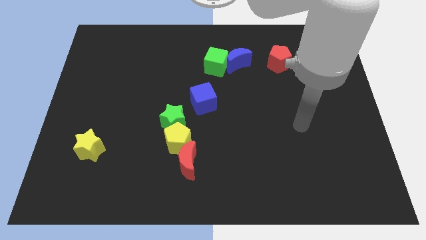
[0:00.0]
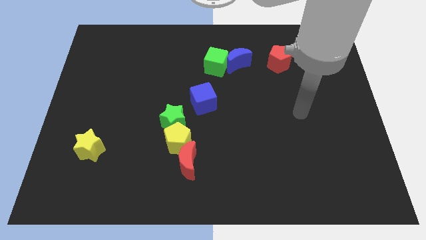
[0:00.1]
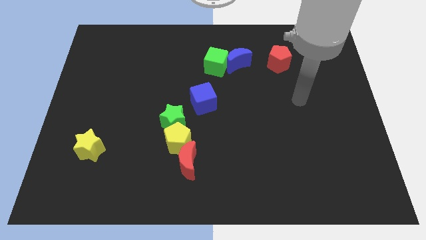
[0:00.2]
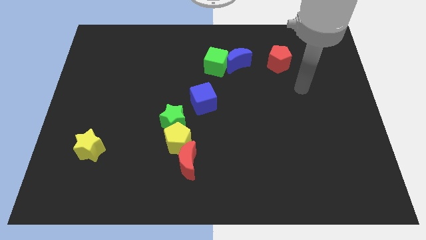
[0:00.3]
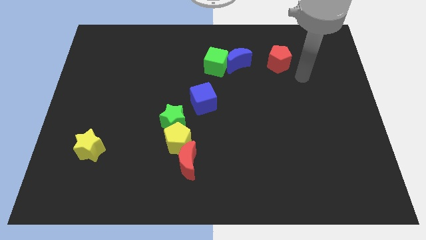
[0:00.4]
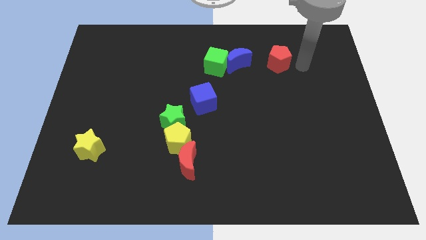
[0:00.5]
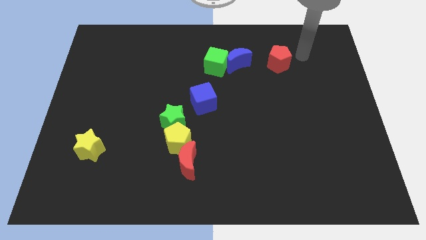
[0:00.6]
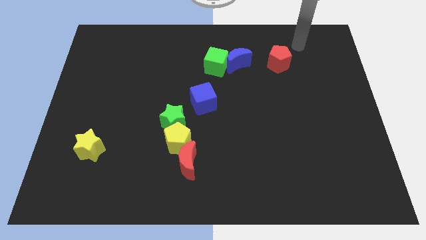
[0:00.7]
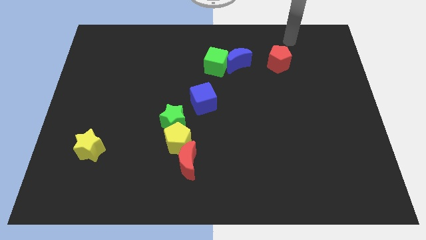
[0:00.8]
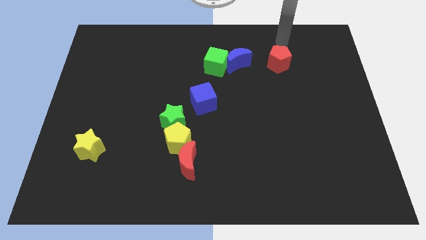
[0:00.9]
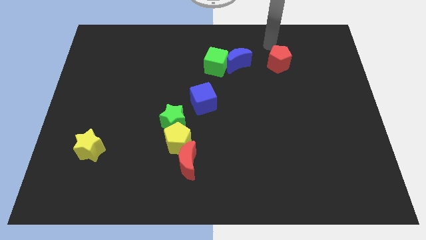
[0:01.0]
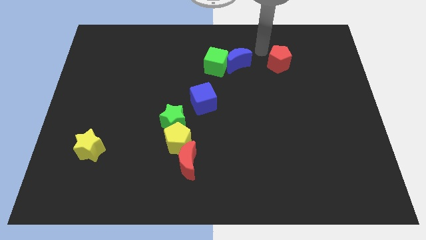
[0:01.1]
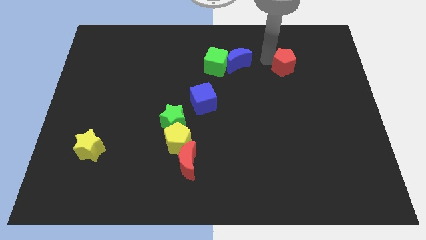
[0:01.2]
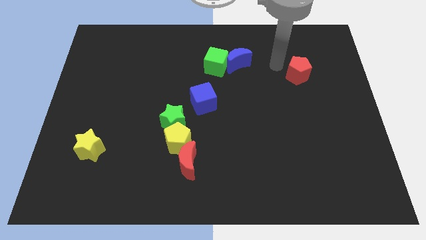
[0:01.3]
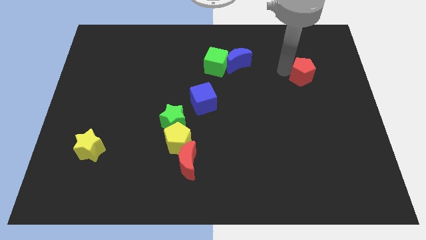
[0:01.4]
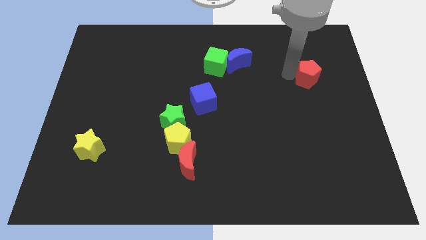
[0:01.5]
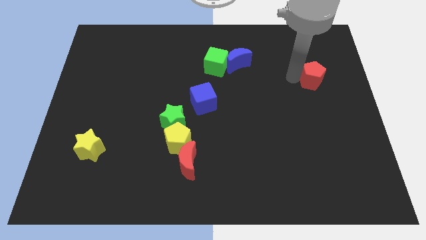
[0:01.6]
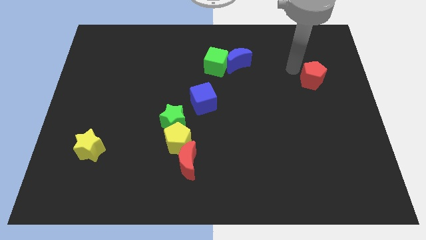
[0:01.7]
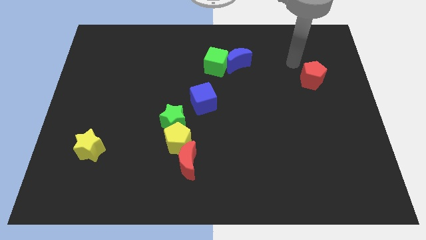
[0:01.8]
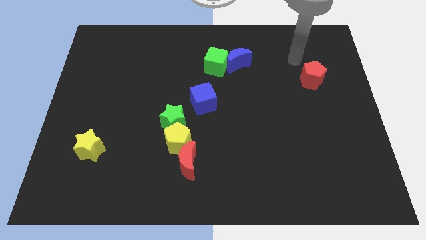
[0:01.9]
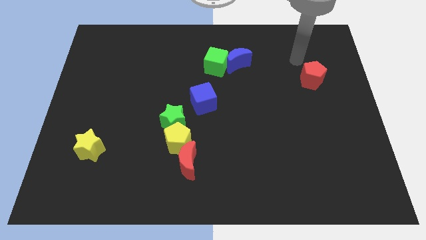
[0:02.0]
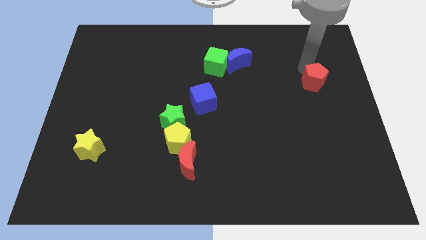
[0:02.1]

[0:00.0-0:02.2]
slide the red pentagon to the right side of the board

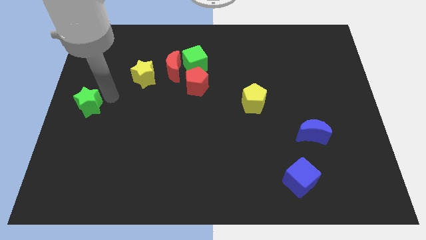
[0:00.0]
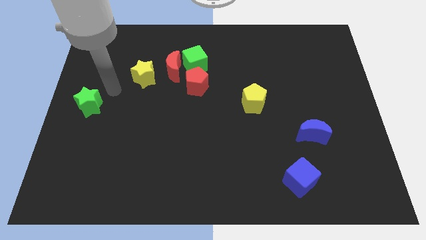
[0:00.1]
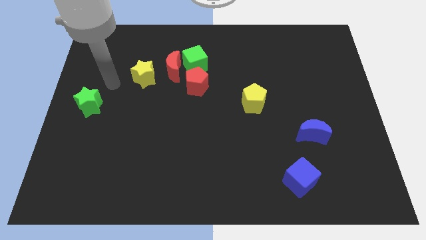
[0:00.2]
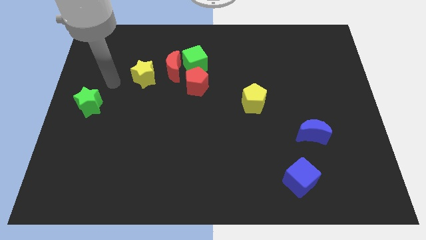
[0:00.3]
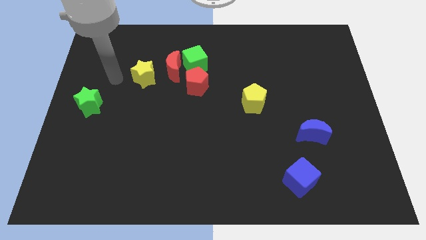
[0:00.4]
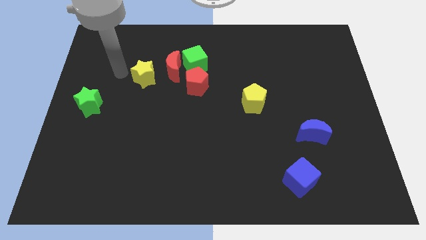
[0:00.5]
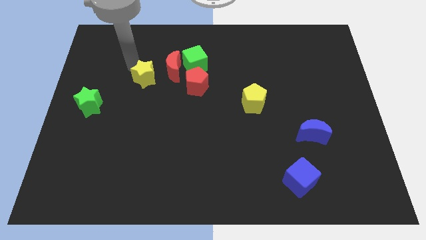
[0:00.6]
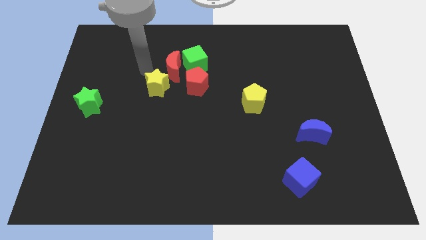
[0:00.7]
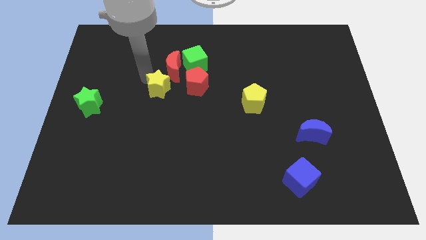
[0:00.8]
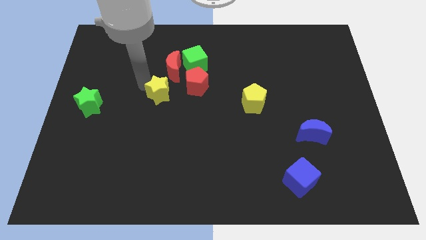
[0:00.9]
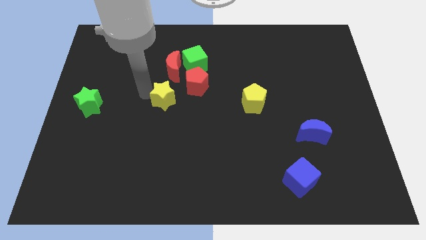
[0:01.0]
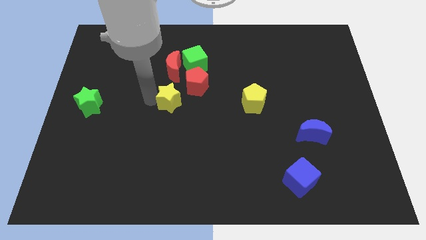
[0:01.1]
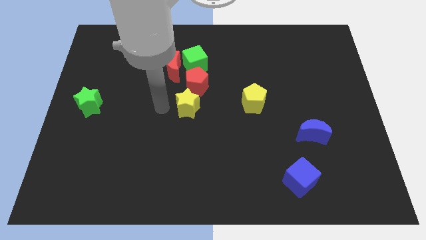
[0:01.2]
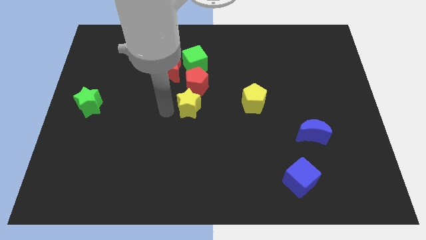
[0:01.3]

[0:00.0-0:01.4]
move the yellow star to the down side of the red pentagon

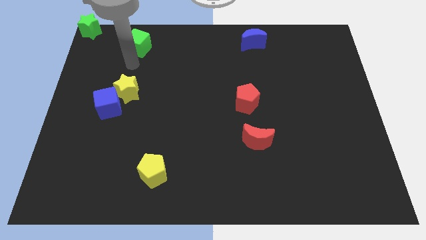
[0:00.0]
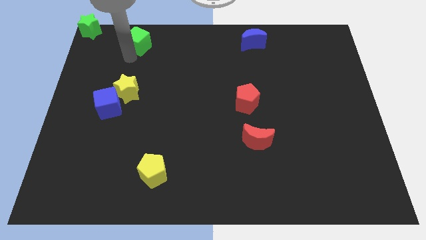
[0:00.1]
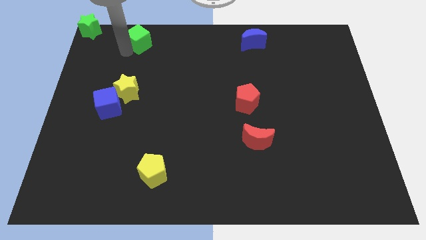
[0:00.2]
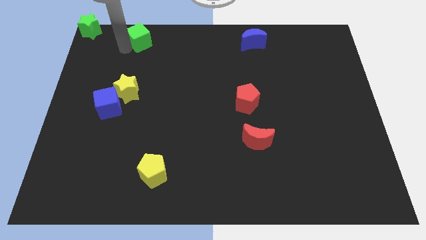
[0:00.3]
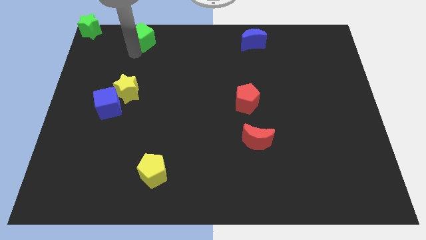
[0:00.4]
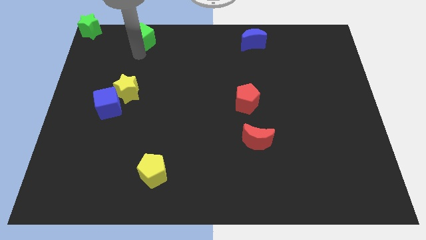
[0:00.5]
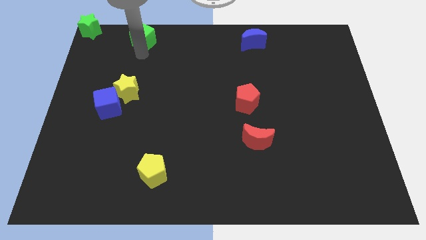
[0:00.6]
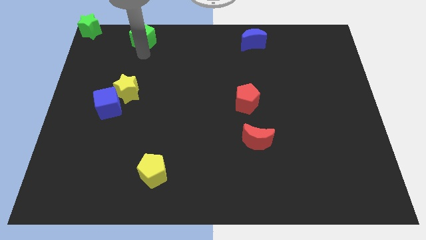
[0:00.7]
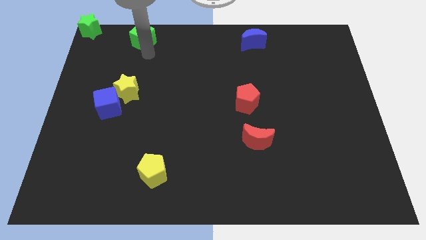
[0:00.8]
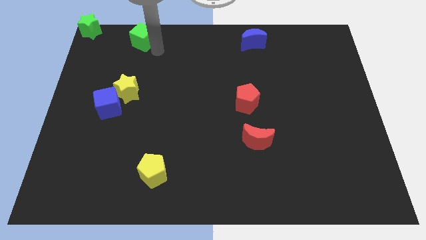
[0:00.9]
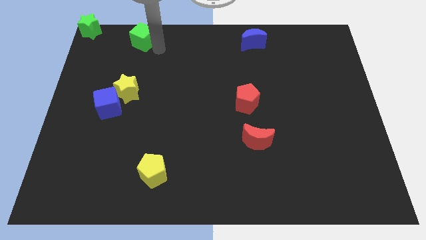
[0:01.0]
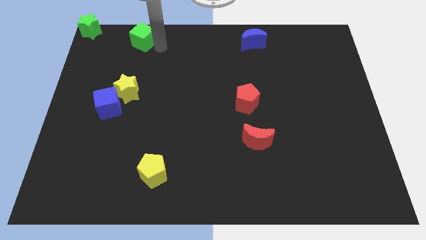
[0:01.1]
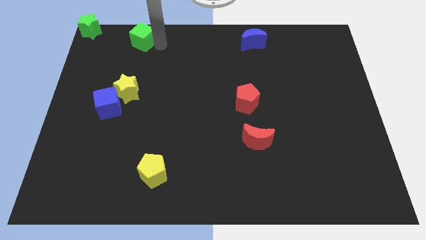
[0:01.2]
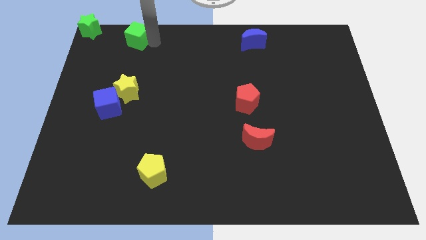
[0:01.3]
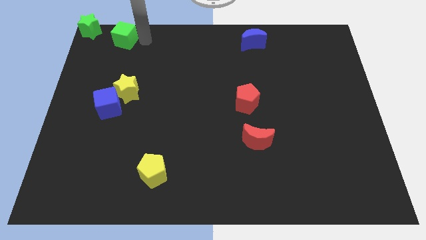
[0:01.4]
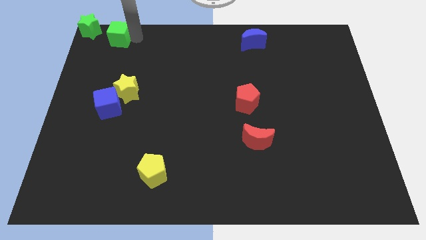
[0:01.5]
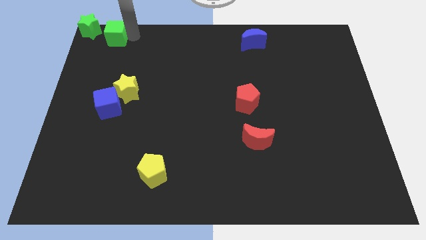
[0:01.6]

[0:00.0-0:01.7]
slide the green cube close to the green star

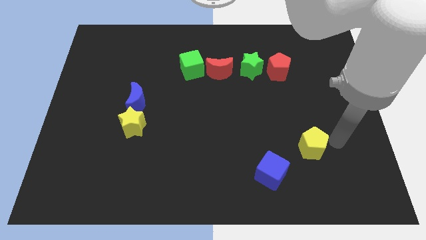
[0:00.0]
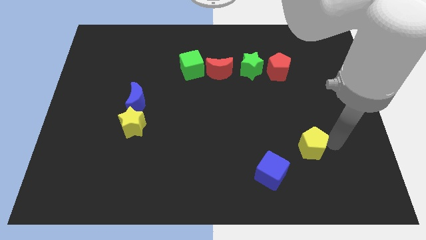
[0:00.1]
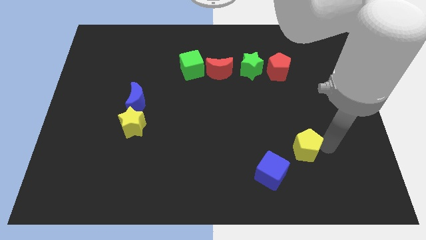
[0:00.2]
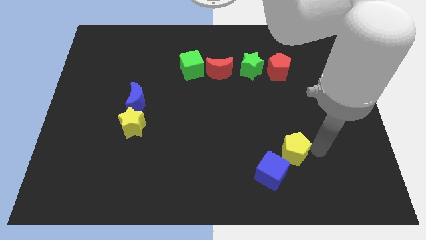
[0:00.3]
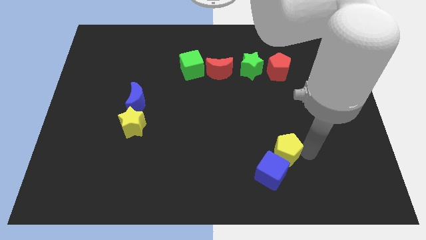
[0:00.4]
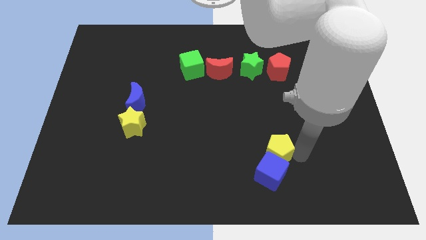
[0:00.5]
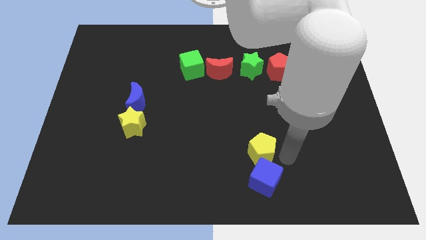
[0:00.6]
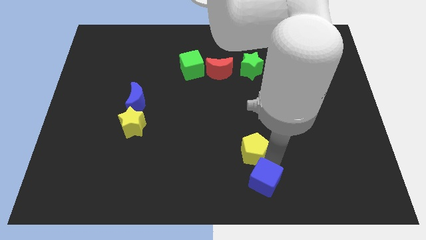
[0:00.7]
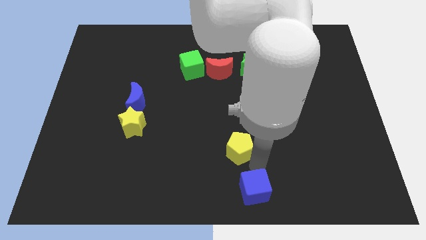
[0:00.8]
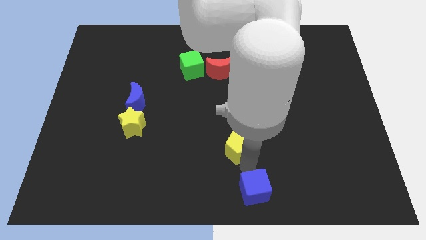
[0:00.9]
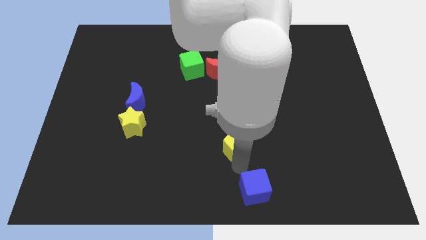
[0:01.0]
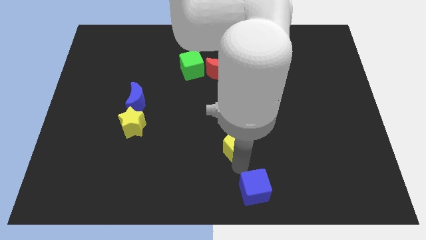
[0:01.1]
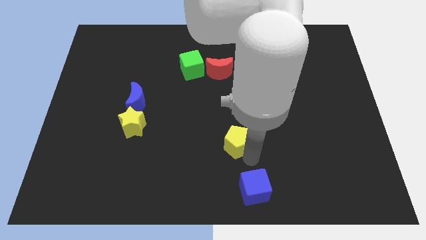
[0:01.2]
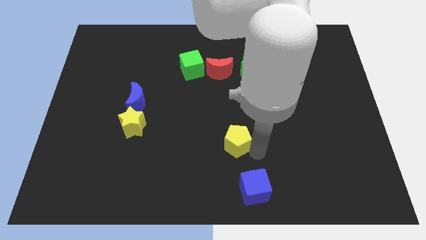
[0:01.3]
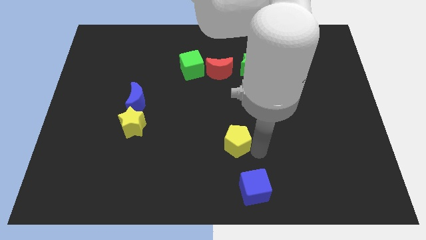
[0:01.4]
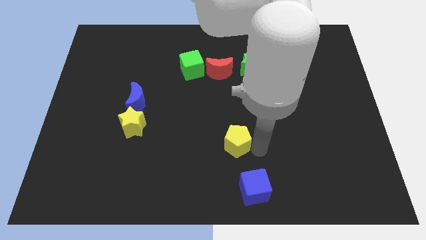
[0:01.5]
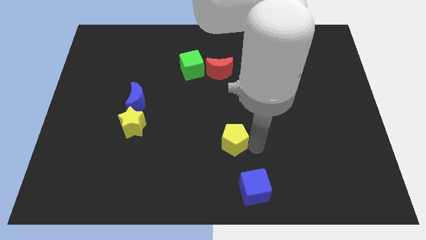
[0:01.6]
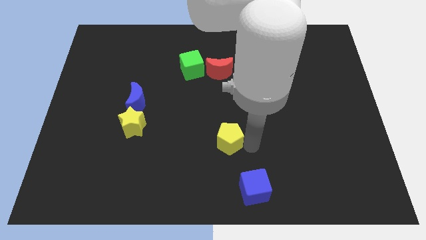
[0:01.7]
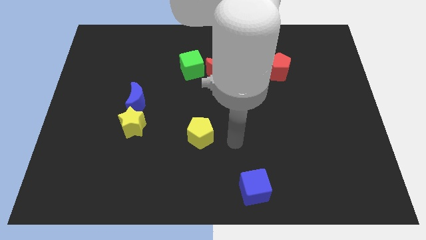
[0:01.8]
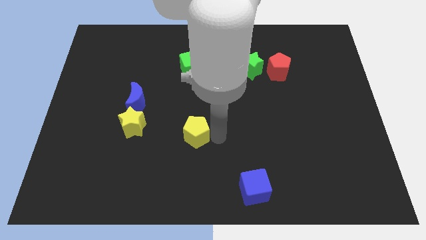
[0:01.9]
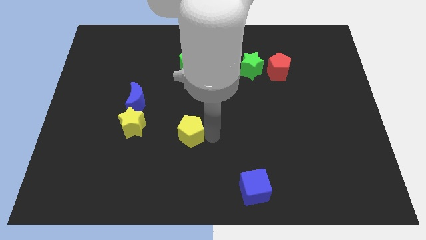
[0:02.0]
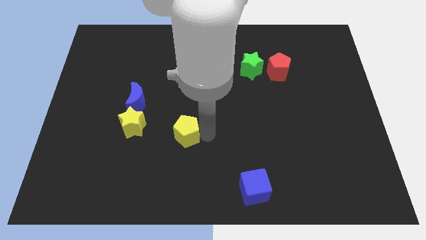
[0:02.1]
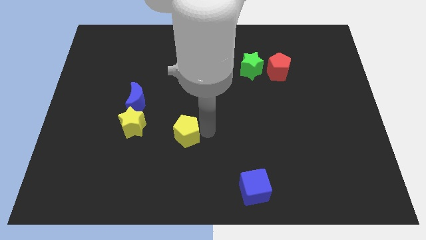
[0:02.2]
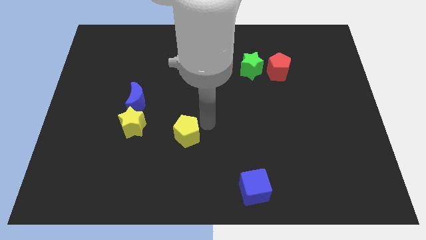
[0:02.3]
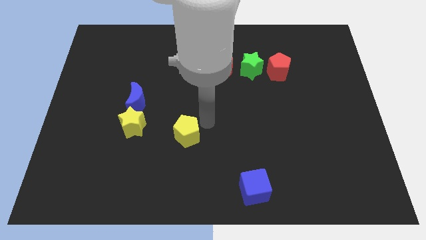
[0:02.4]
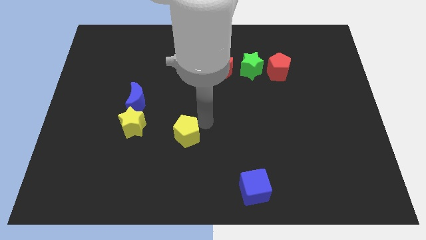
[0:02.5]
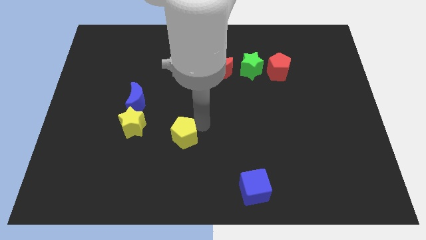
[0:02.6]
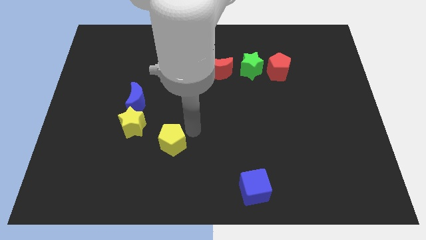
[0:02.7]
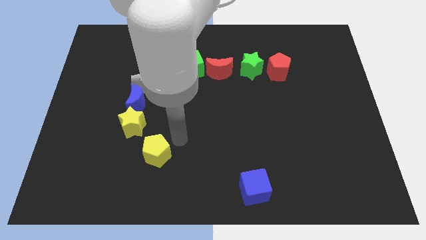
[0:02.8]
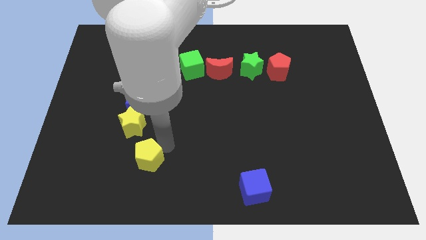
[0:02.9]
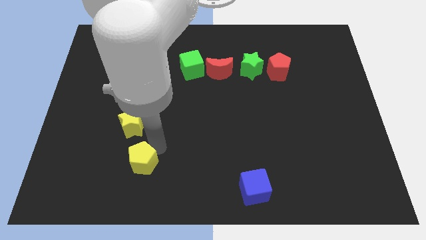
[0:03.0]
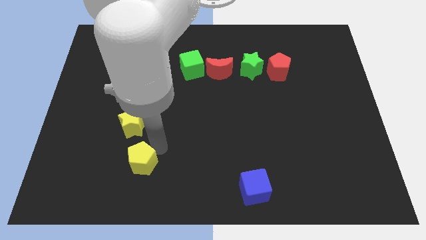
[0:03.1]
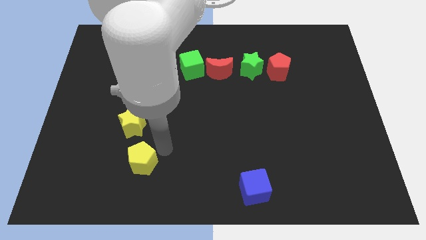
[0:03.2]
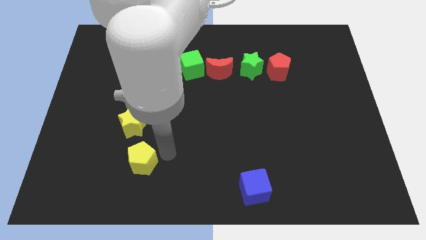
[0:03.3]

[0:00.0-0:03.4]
drag the yellow pentagon to the bottom right side of the yellow star

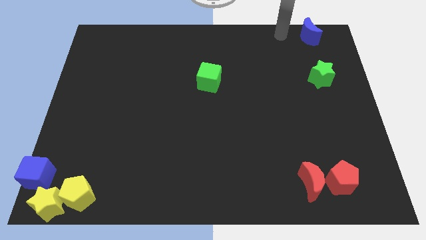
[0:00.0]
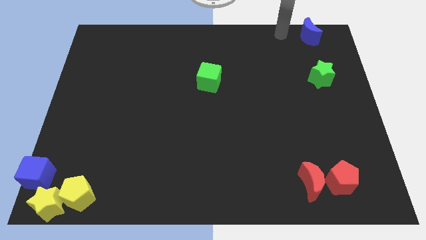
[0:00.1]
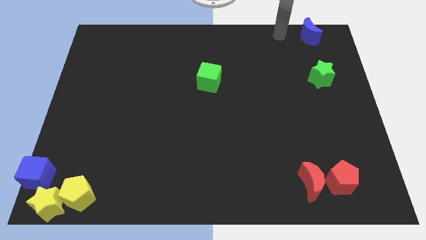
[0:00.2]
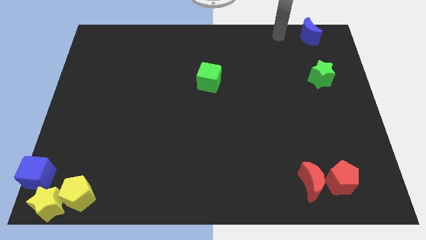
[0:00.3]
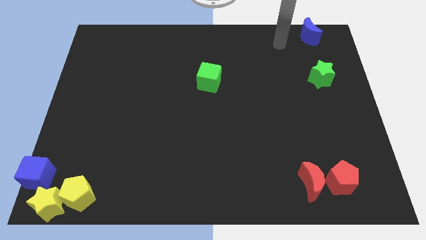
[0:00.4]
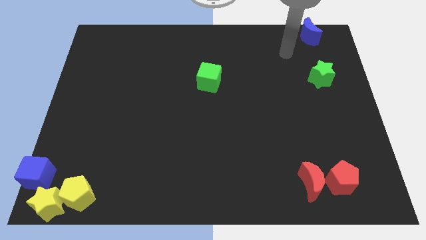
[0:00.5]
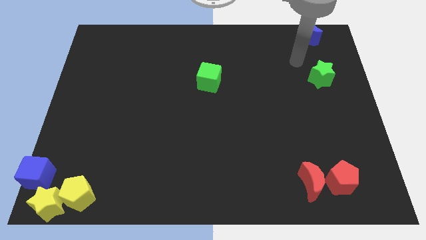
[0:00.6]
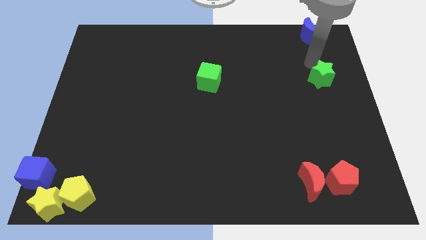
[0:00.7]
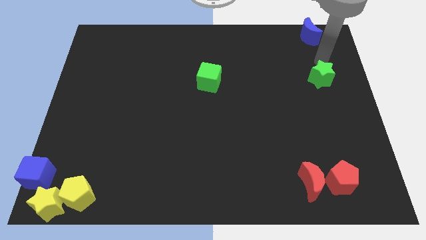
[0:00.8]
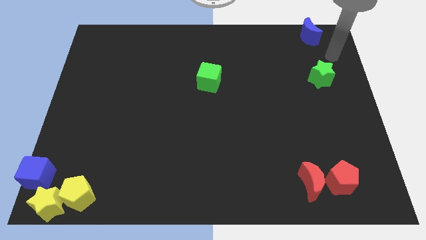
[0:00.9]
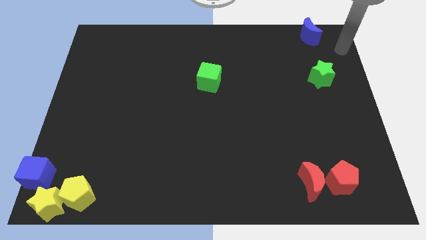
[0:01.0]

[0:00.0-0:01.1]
place arm in between green star and blue moon
